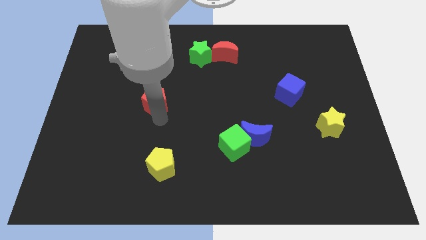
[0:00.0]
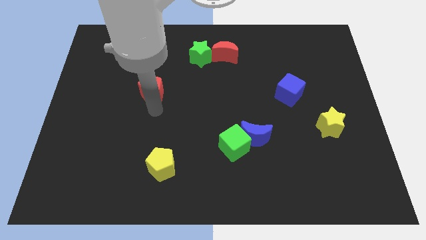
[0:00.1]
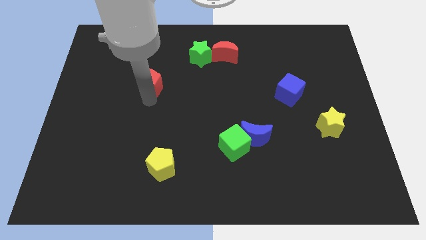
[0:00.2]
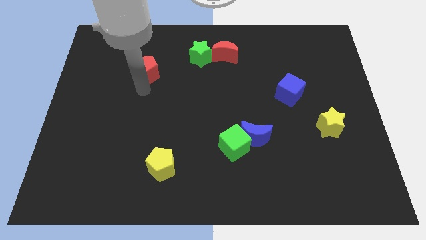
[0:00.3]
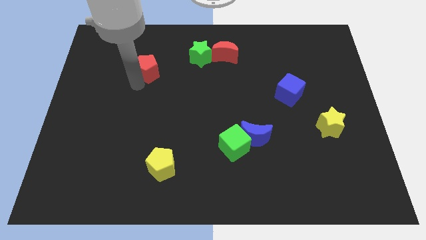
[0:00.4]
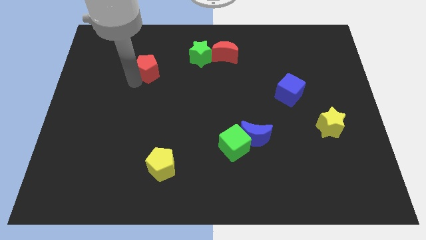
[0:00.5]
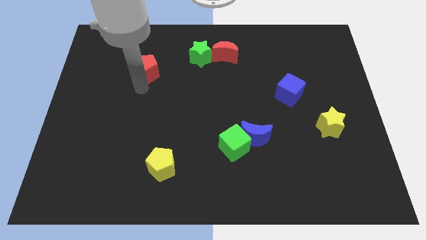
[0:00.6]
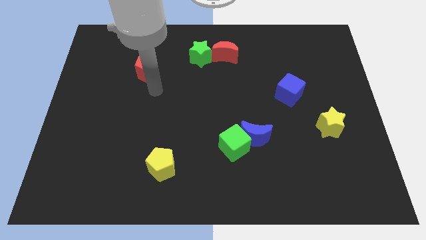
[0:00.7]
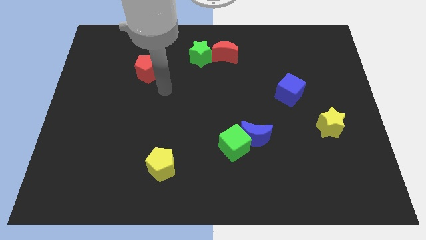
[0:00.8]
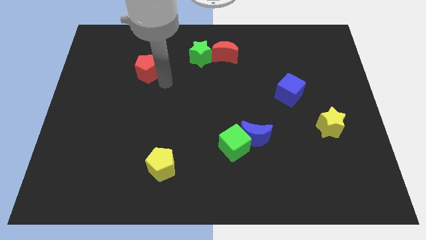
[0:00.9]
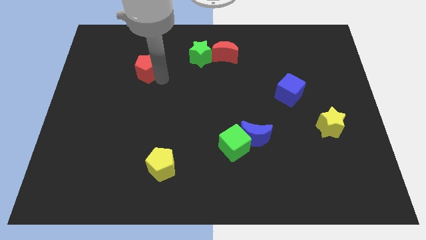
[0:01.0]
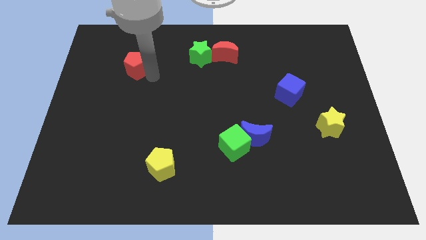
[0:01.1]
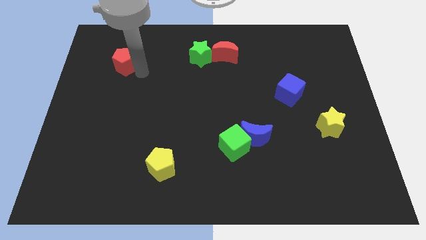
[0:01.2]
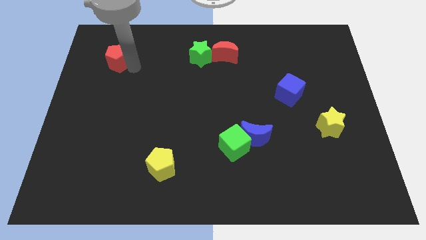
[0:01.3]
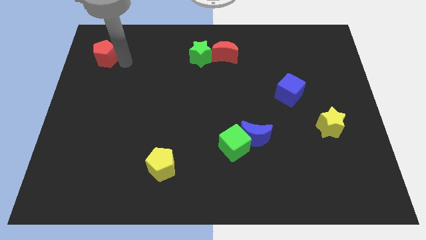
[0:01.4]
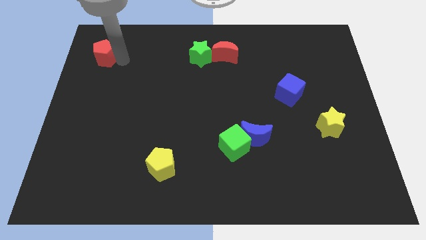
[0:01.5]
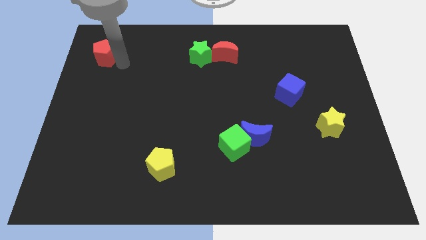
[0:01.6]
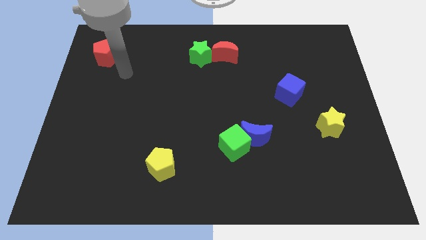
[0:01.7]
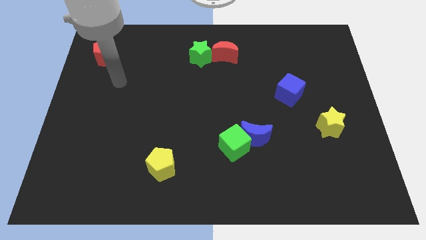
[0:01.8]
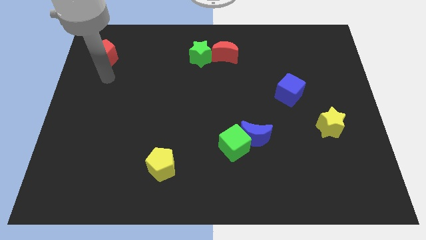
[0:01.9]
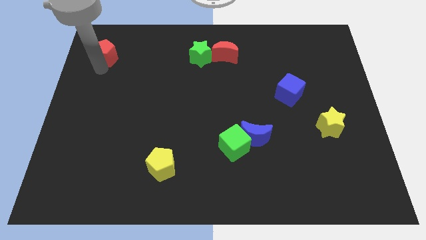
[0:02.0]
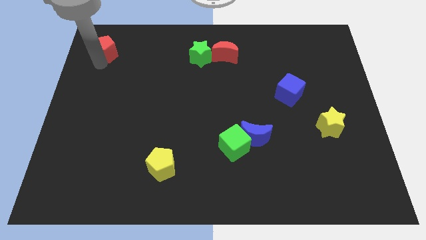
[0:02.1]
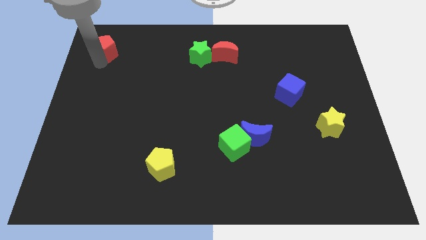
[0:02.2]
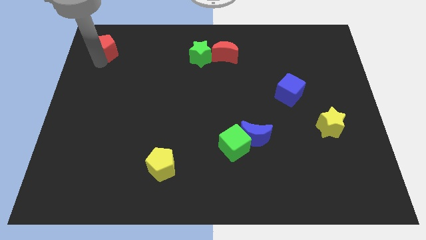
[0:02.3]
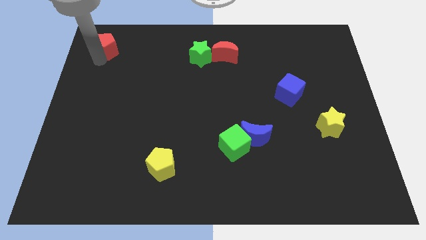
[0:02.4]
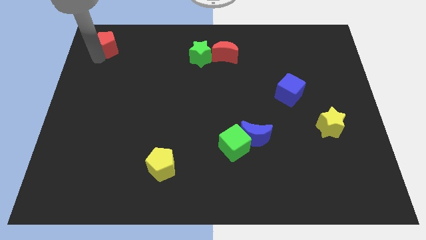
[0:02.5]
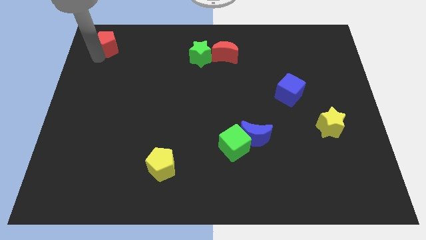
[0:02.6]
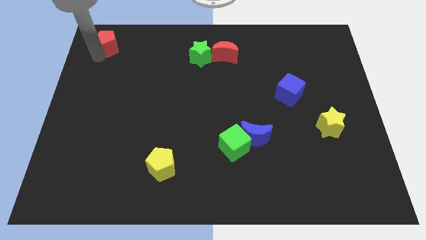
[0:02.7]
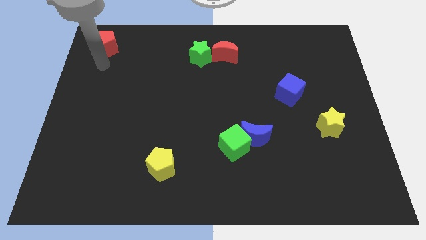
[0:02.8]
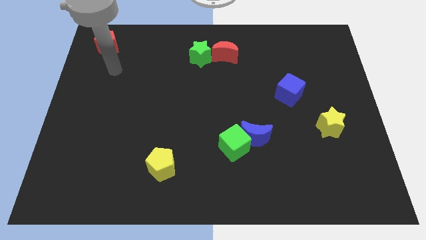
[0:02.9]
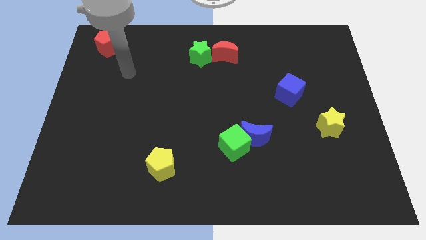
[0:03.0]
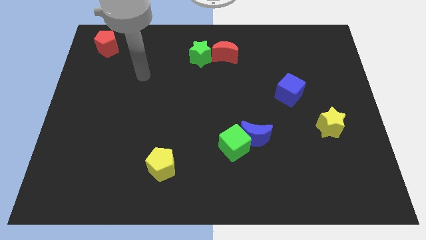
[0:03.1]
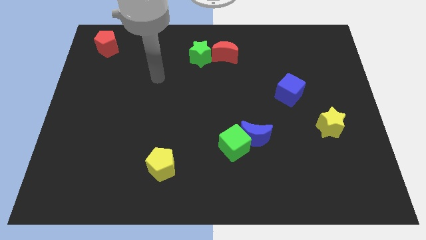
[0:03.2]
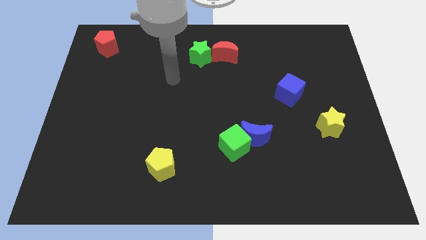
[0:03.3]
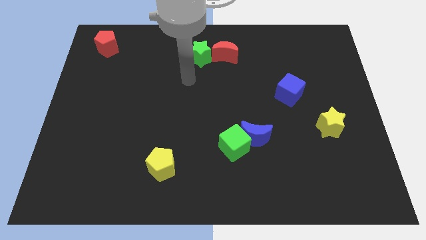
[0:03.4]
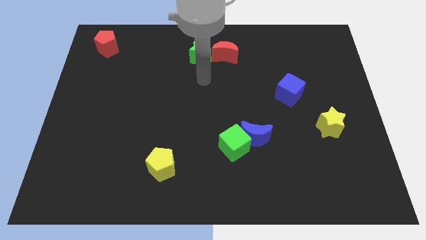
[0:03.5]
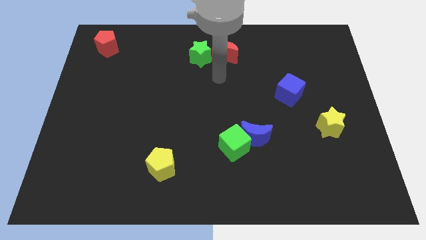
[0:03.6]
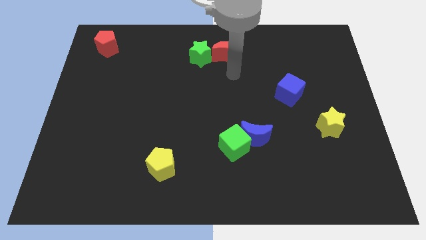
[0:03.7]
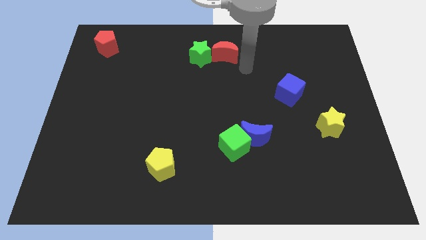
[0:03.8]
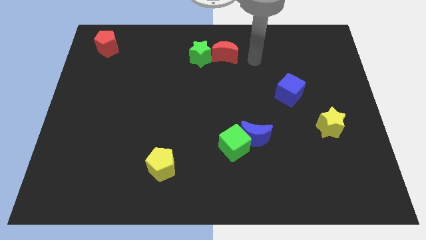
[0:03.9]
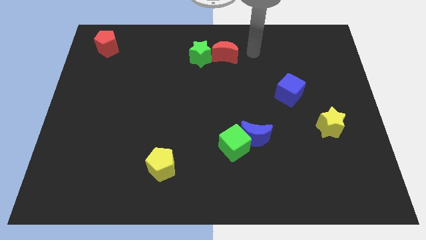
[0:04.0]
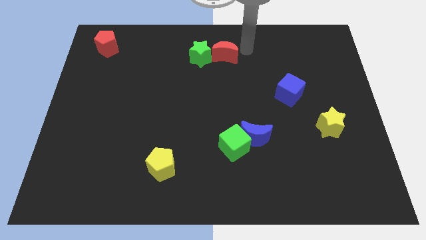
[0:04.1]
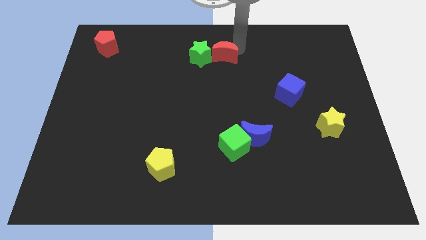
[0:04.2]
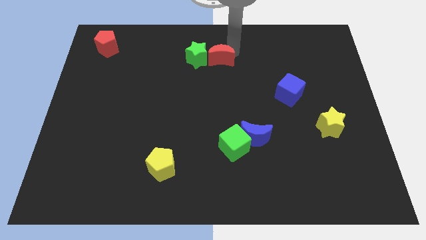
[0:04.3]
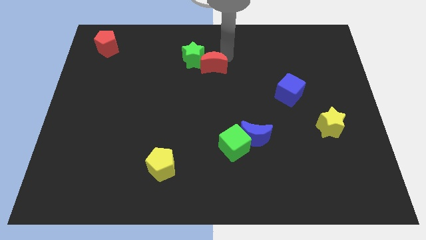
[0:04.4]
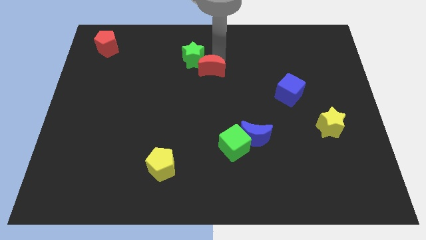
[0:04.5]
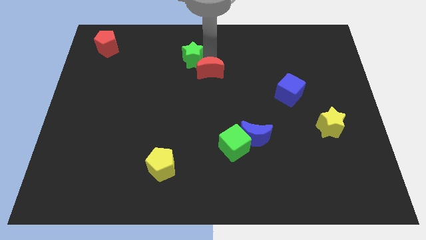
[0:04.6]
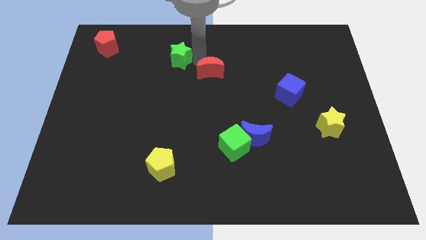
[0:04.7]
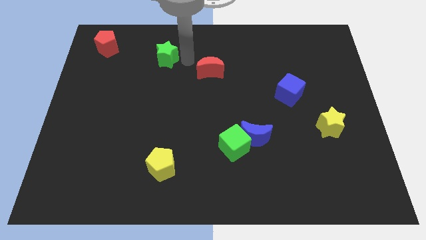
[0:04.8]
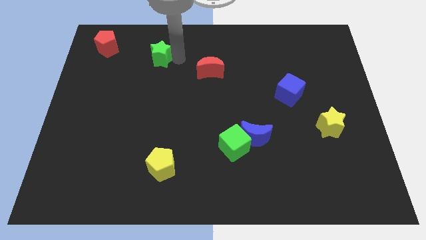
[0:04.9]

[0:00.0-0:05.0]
separate the green star from the red pentagon

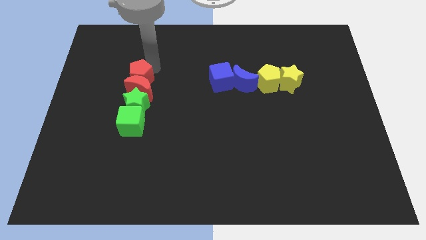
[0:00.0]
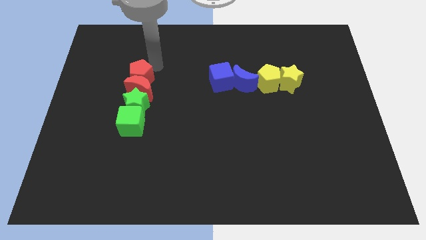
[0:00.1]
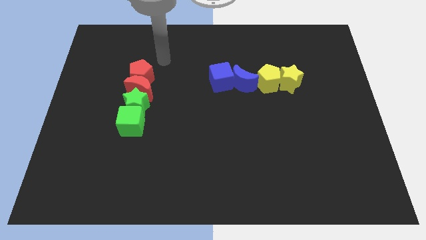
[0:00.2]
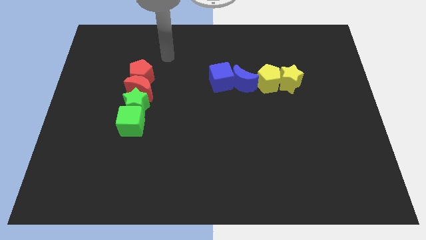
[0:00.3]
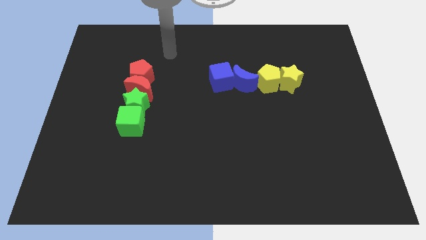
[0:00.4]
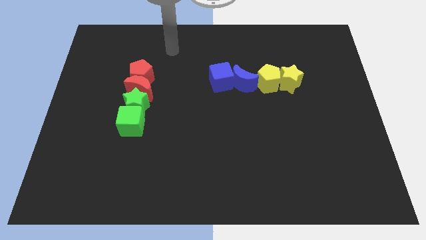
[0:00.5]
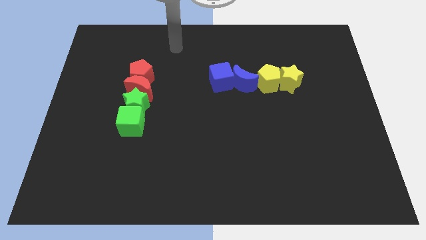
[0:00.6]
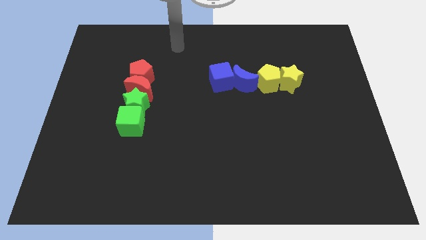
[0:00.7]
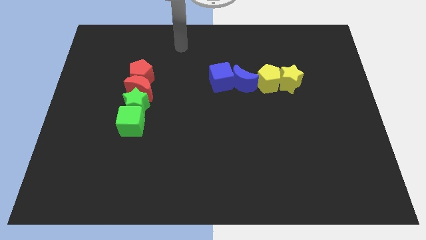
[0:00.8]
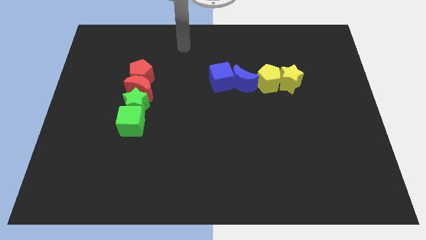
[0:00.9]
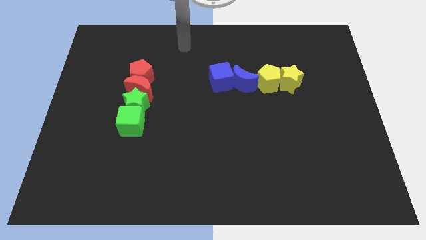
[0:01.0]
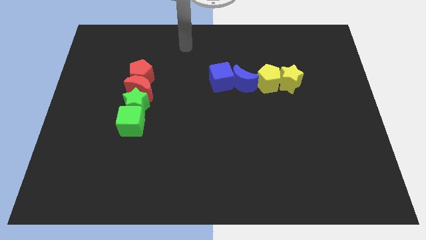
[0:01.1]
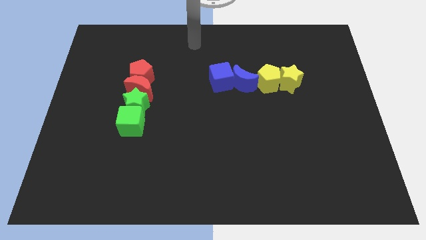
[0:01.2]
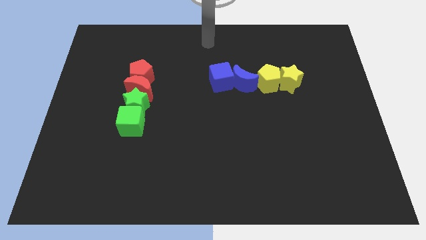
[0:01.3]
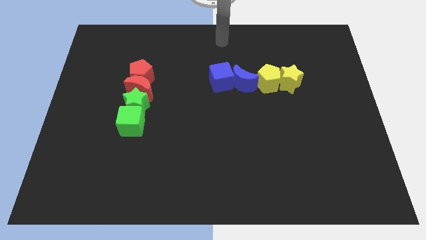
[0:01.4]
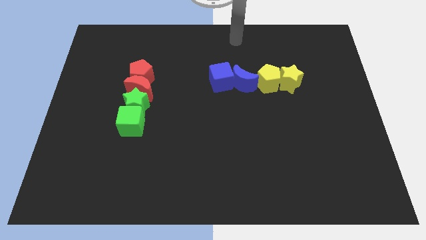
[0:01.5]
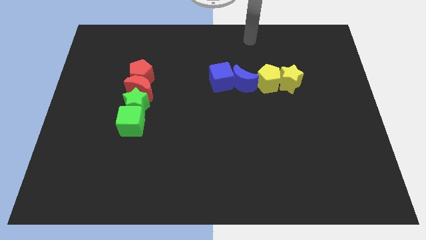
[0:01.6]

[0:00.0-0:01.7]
move away from red pentagon

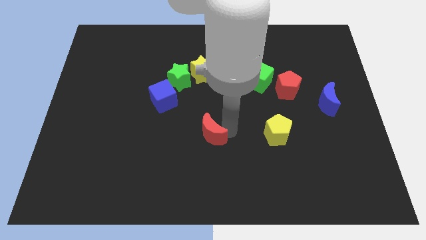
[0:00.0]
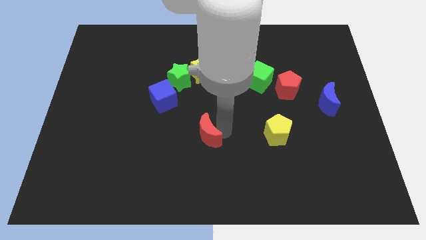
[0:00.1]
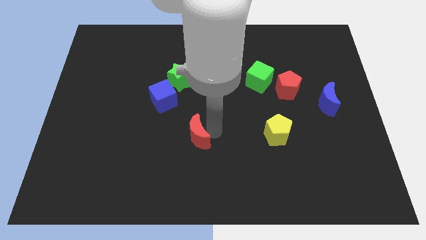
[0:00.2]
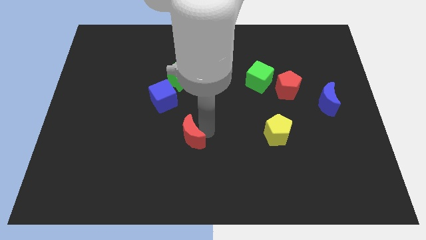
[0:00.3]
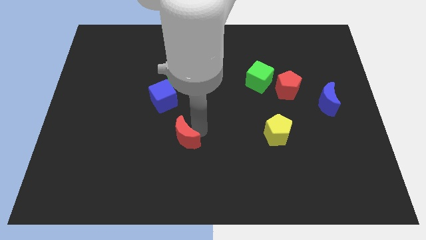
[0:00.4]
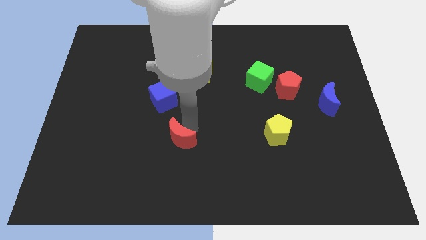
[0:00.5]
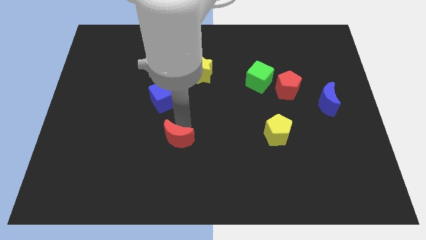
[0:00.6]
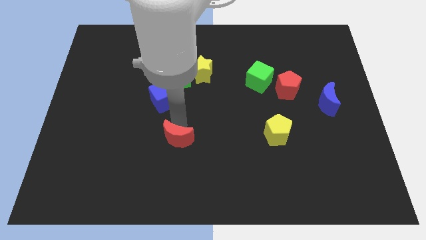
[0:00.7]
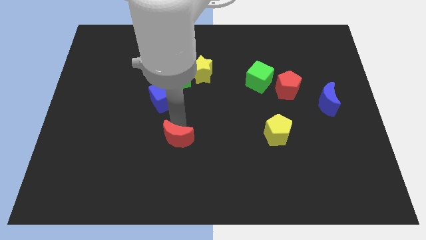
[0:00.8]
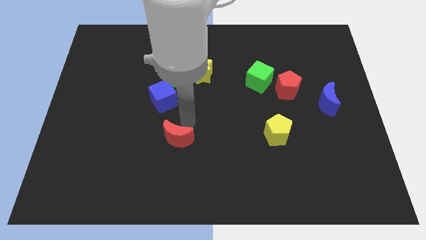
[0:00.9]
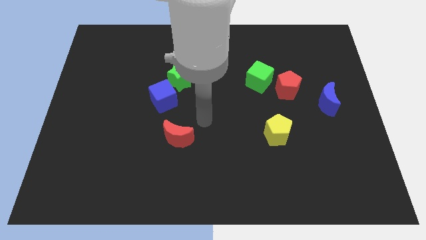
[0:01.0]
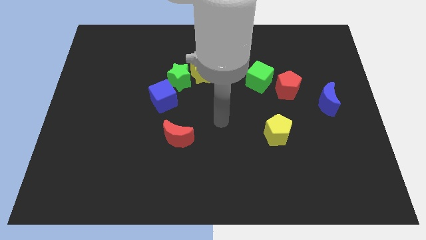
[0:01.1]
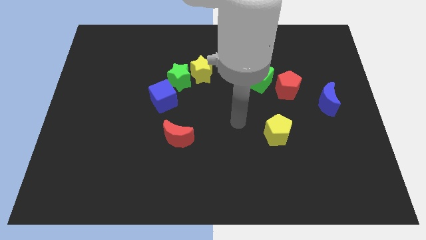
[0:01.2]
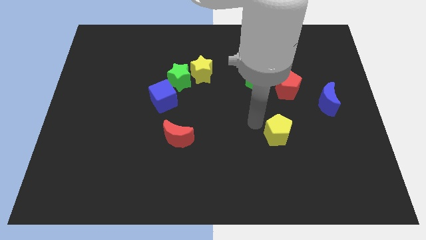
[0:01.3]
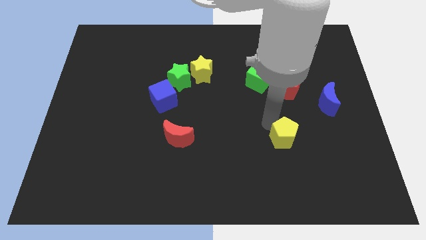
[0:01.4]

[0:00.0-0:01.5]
place red moon to the bottom of blue cube

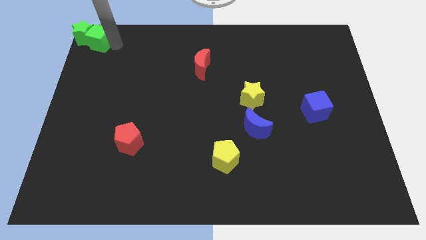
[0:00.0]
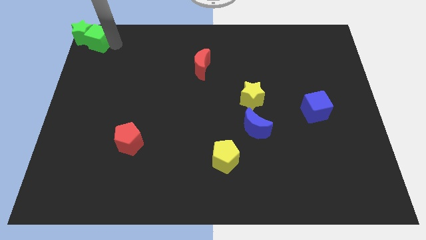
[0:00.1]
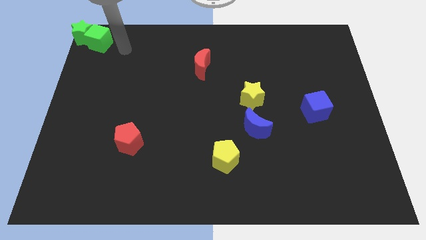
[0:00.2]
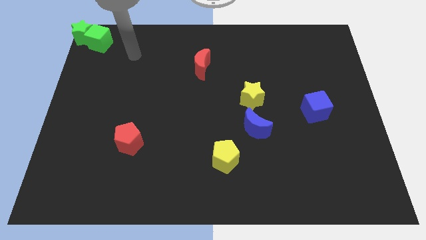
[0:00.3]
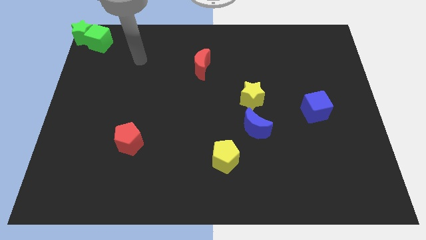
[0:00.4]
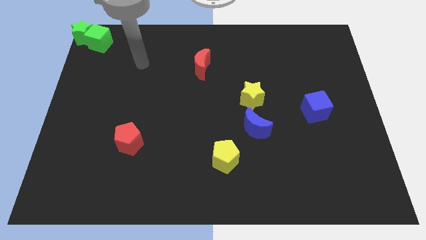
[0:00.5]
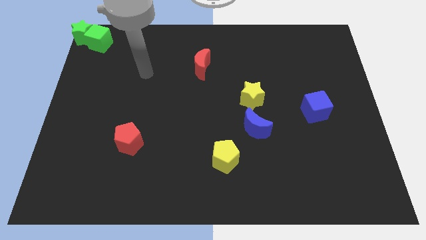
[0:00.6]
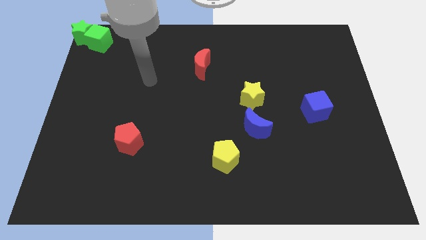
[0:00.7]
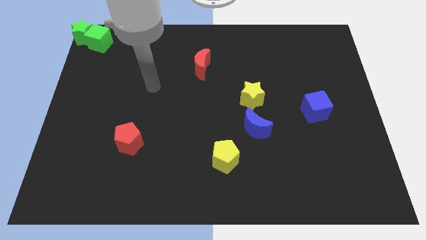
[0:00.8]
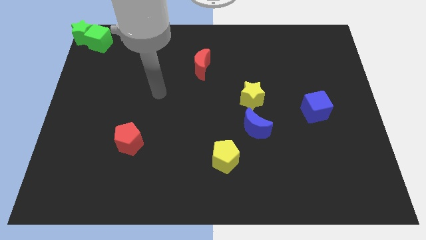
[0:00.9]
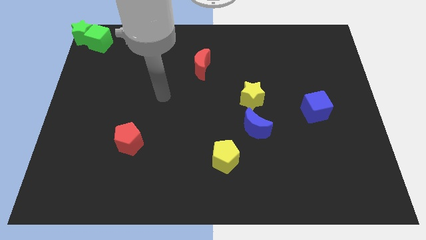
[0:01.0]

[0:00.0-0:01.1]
place your arm in between the red crescent and red pentagon
